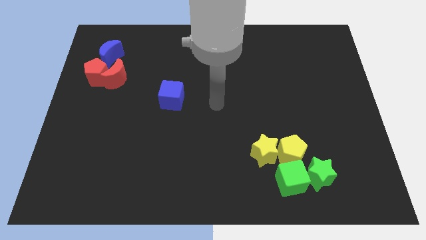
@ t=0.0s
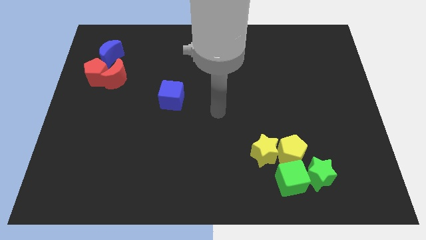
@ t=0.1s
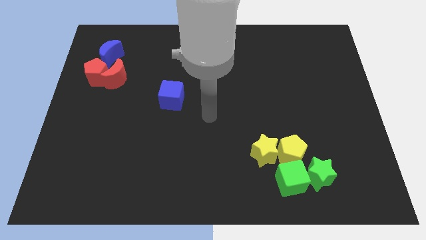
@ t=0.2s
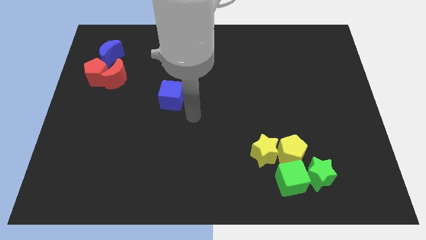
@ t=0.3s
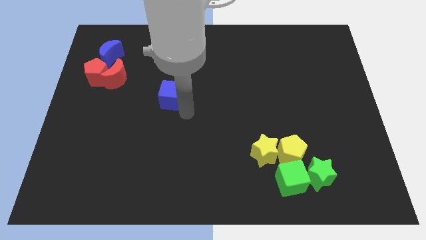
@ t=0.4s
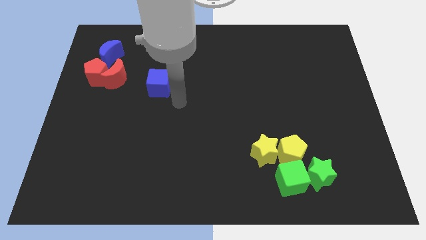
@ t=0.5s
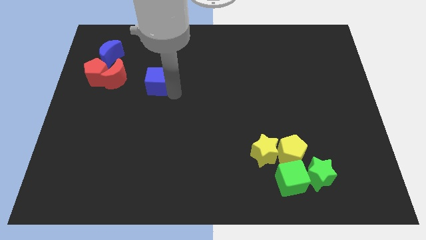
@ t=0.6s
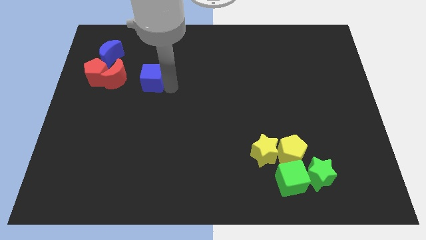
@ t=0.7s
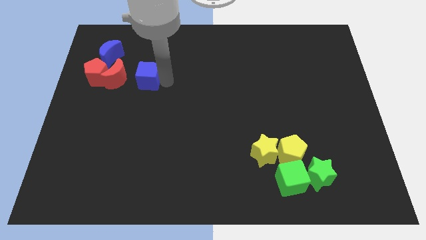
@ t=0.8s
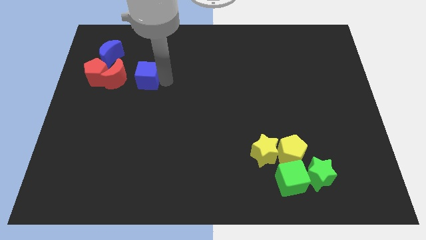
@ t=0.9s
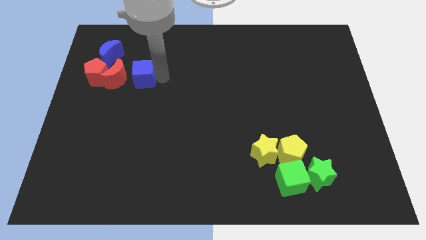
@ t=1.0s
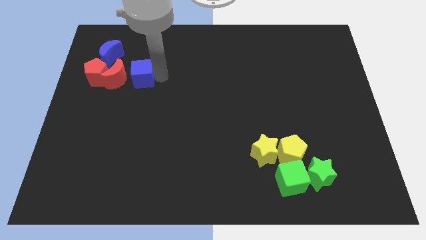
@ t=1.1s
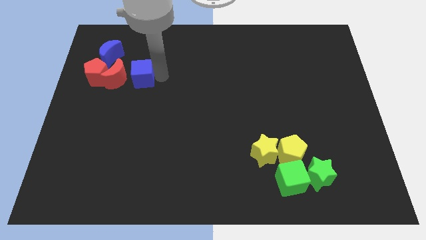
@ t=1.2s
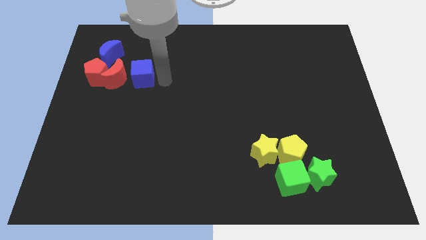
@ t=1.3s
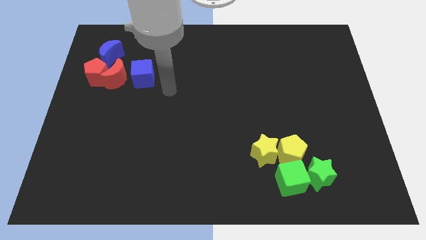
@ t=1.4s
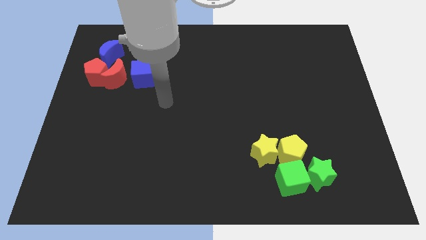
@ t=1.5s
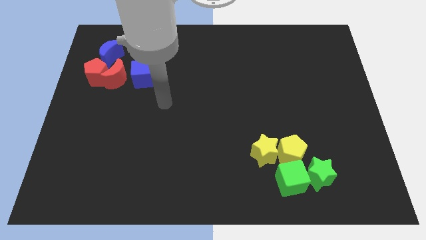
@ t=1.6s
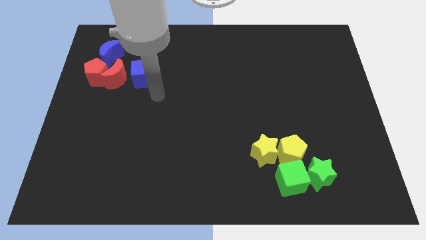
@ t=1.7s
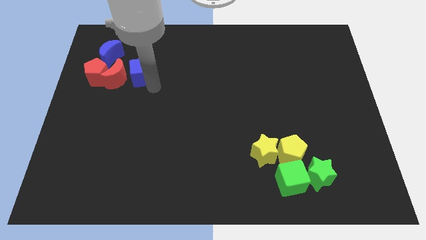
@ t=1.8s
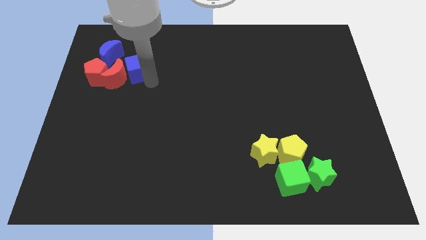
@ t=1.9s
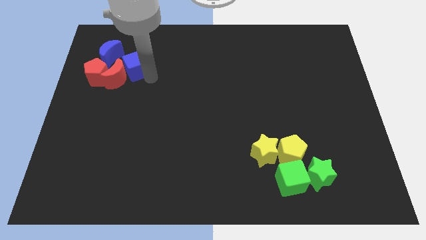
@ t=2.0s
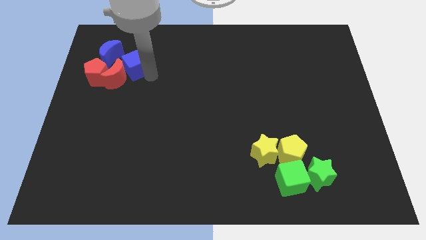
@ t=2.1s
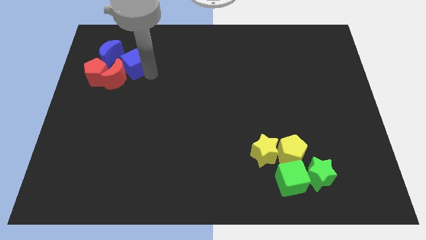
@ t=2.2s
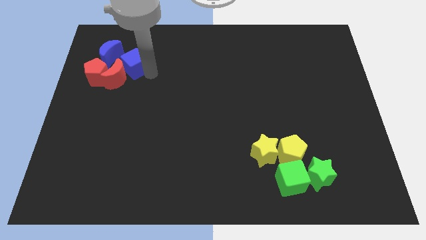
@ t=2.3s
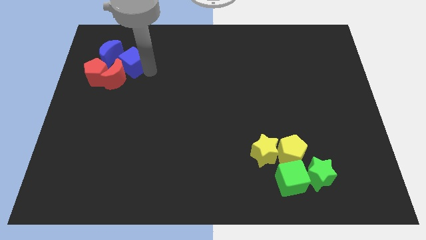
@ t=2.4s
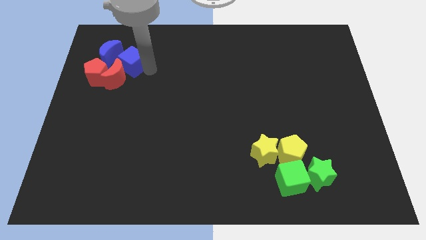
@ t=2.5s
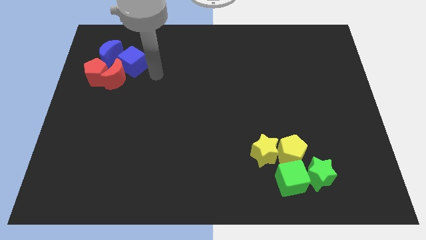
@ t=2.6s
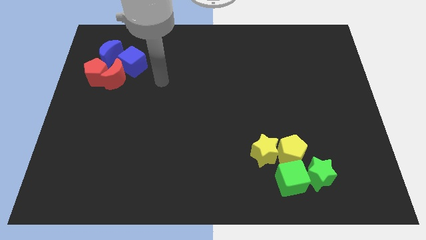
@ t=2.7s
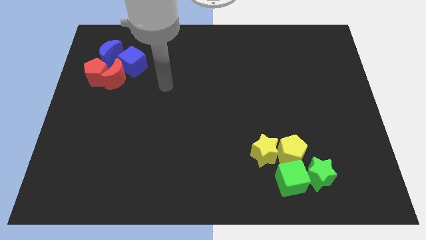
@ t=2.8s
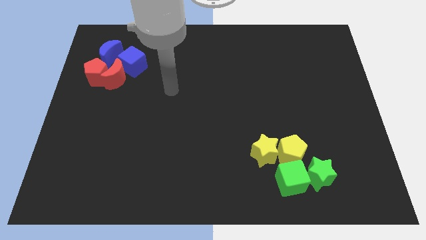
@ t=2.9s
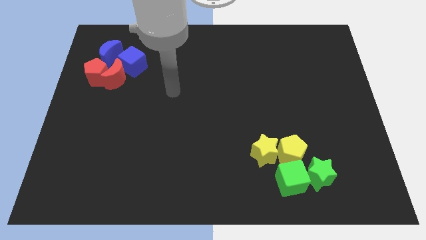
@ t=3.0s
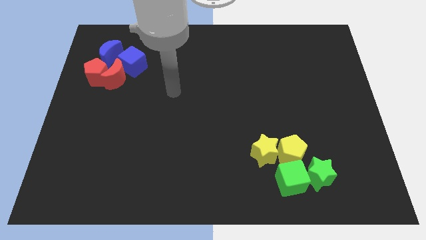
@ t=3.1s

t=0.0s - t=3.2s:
drag the blue cube diagonally top right to the red moon

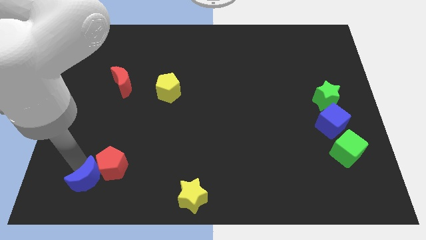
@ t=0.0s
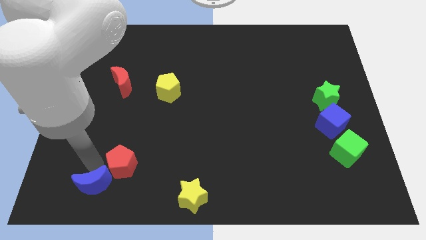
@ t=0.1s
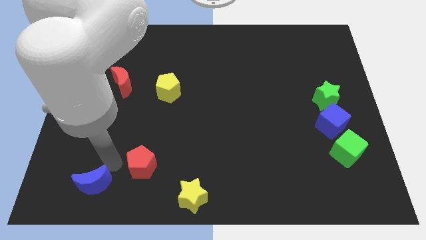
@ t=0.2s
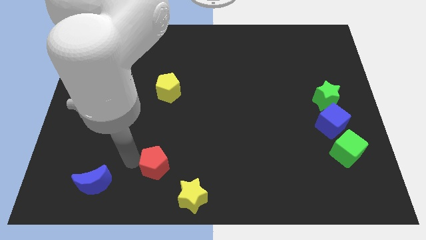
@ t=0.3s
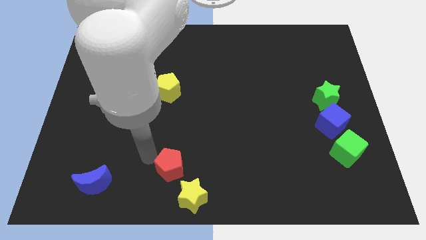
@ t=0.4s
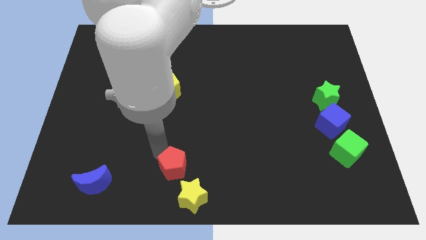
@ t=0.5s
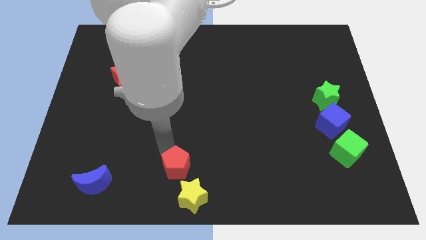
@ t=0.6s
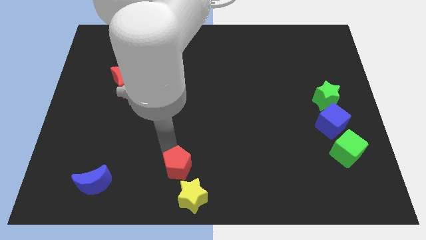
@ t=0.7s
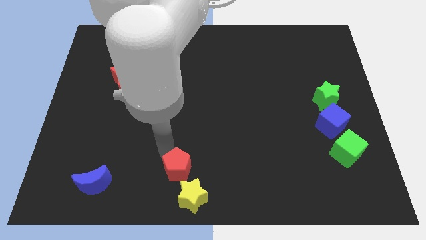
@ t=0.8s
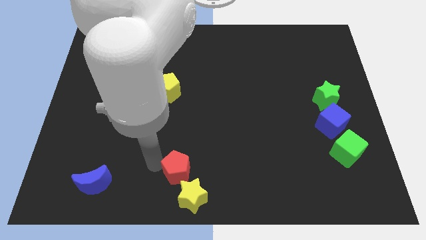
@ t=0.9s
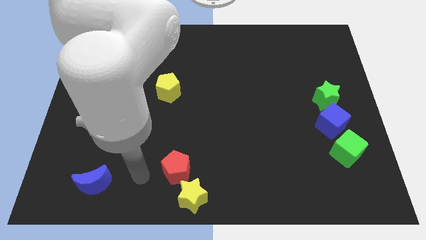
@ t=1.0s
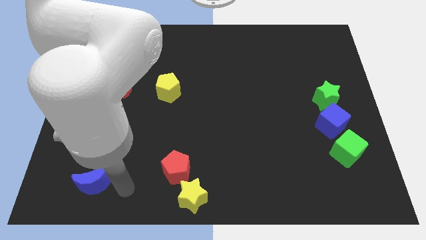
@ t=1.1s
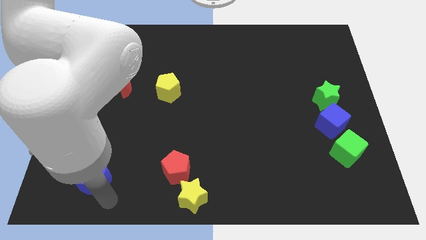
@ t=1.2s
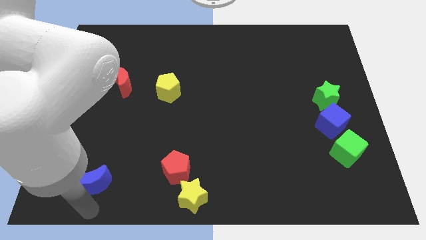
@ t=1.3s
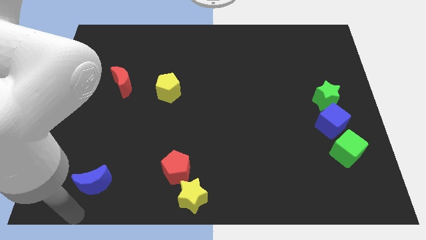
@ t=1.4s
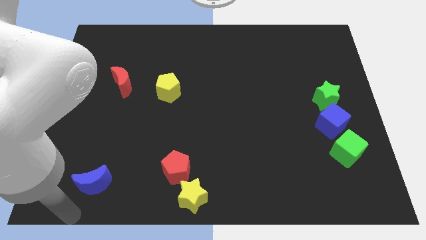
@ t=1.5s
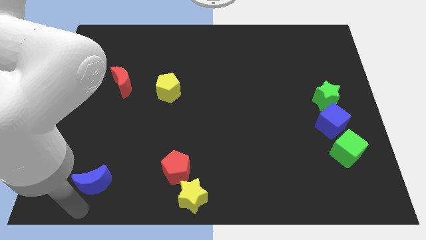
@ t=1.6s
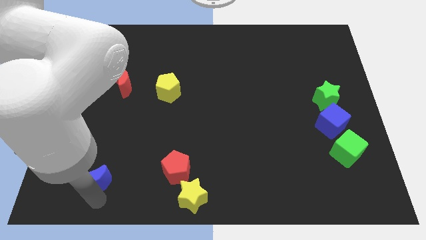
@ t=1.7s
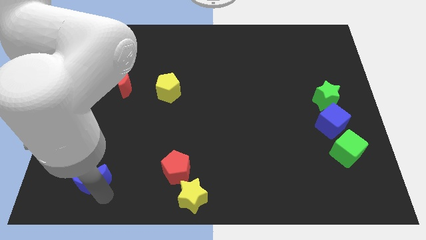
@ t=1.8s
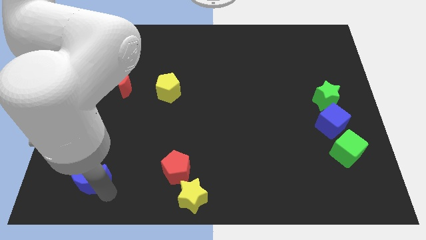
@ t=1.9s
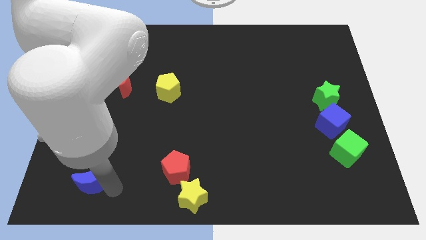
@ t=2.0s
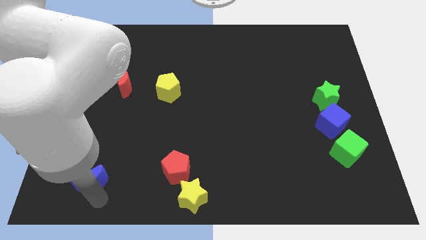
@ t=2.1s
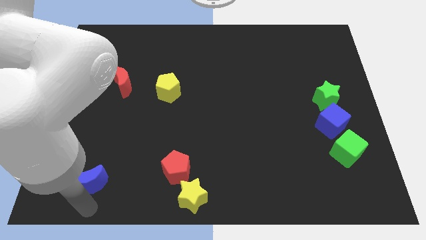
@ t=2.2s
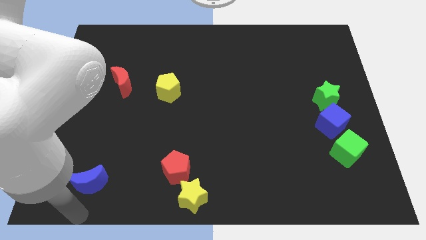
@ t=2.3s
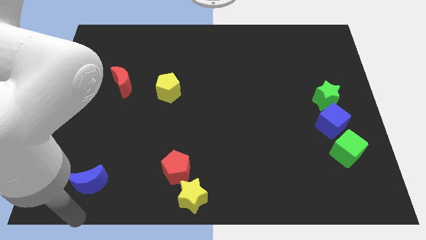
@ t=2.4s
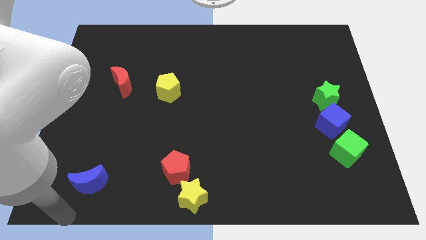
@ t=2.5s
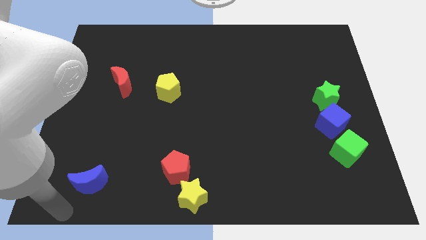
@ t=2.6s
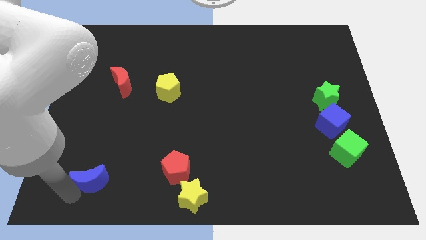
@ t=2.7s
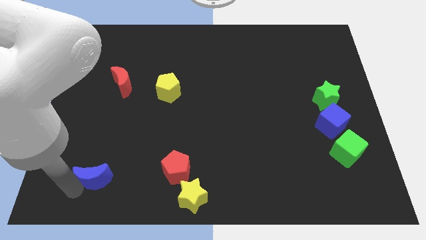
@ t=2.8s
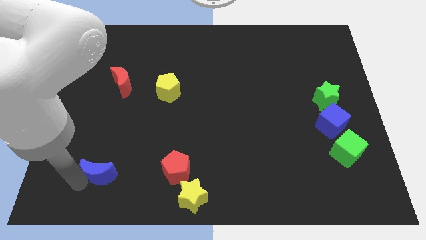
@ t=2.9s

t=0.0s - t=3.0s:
push the red pentagon to the top left of the yellow star

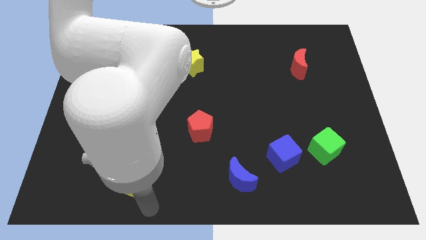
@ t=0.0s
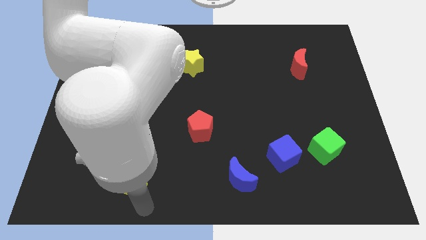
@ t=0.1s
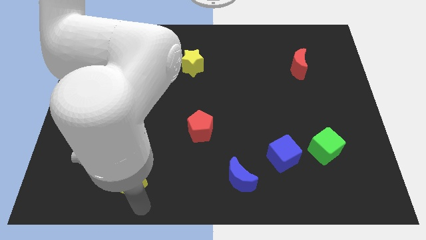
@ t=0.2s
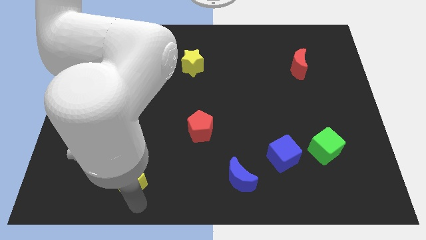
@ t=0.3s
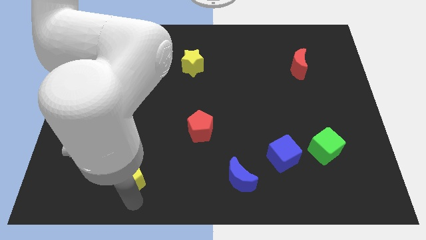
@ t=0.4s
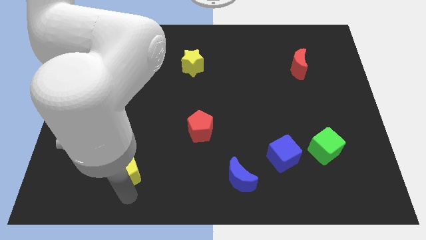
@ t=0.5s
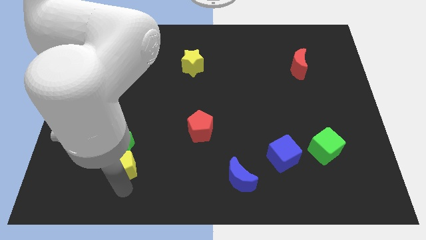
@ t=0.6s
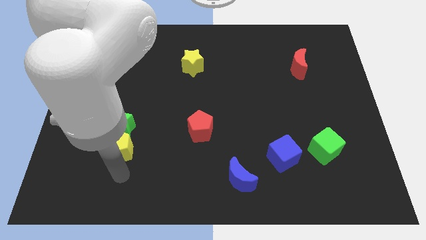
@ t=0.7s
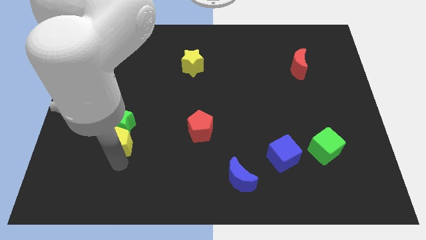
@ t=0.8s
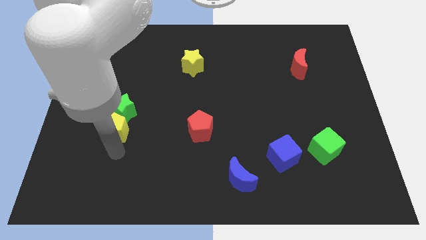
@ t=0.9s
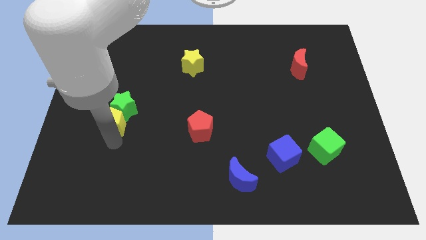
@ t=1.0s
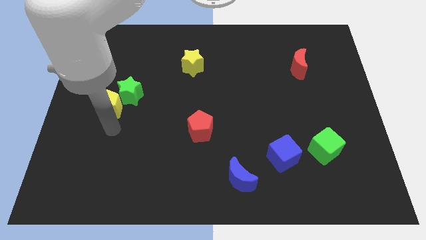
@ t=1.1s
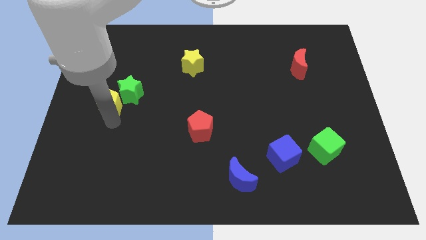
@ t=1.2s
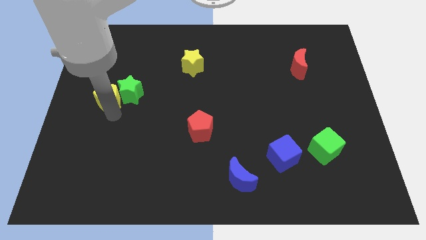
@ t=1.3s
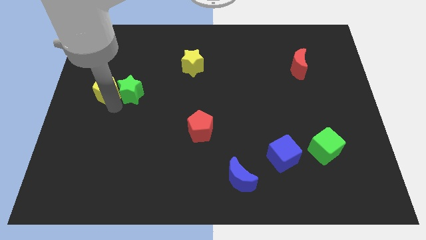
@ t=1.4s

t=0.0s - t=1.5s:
push the yellow and green star to the top side

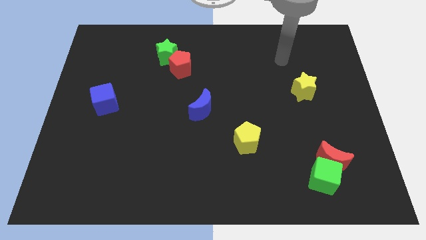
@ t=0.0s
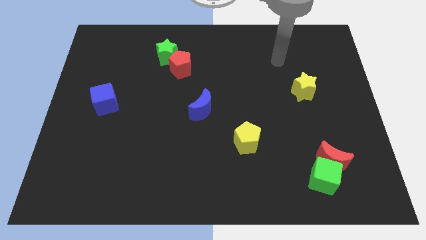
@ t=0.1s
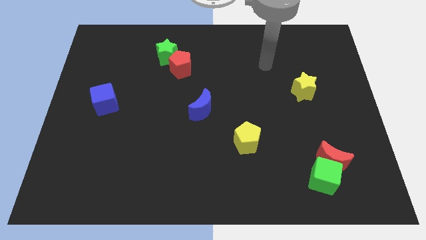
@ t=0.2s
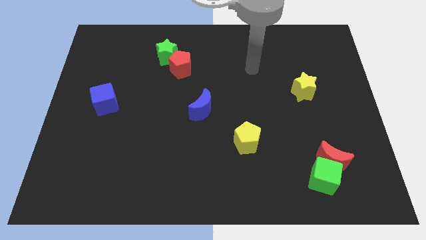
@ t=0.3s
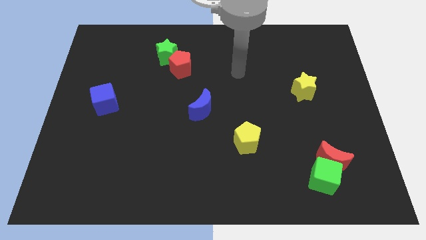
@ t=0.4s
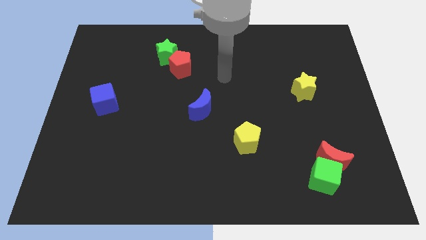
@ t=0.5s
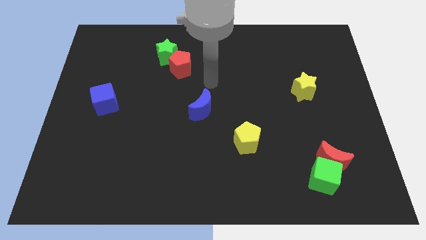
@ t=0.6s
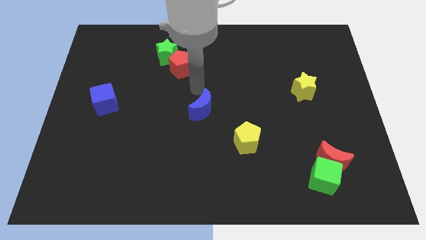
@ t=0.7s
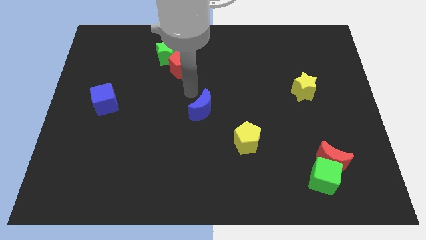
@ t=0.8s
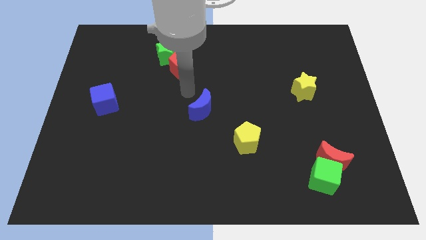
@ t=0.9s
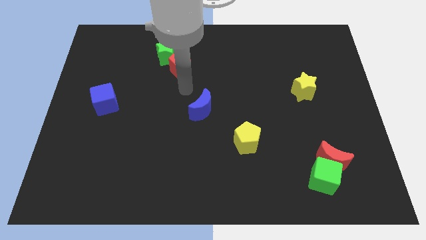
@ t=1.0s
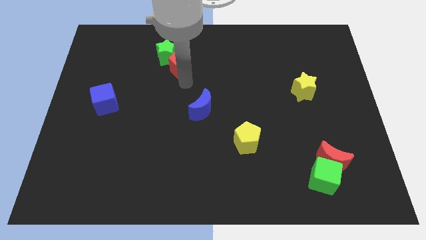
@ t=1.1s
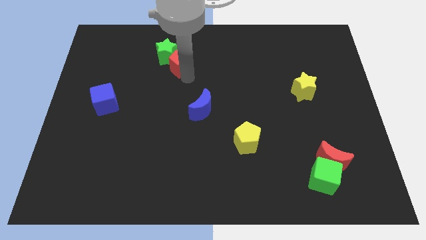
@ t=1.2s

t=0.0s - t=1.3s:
place your arm near to the red pentagon

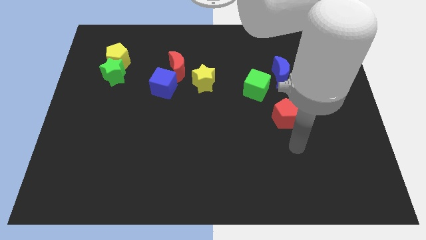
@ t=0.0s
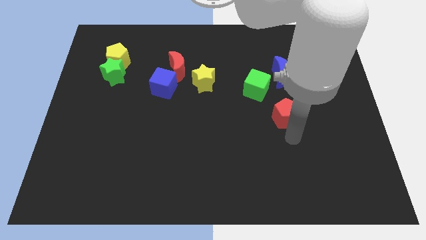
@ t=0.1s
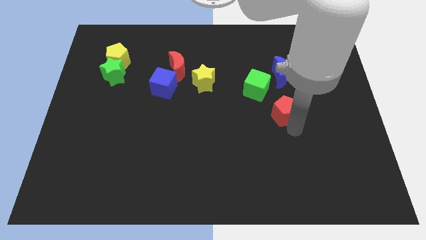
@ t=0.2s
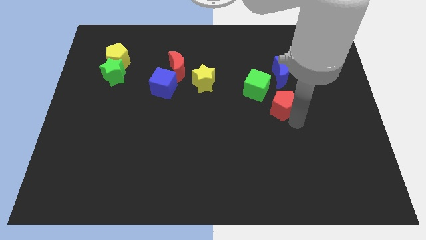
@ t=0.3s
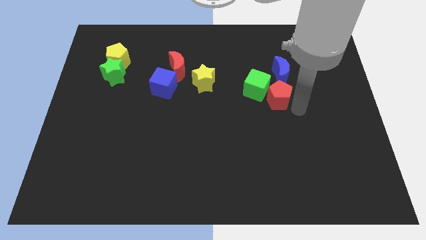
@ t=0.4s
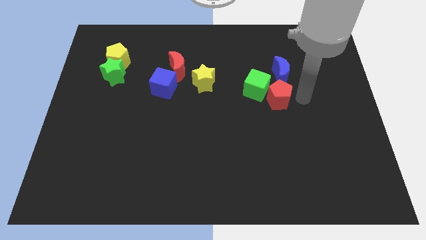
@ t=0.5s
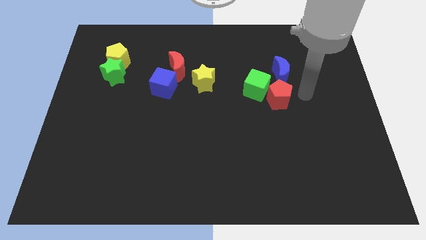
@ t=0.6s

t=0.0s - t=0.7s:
move the red pentagon close to the green and blue block
